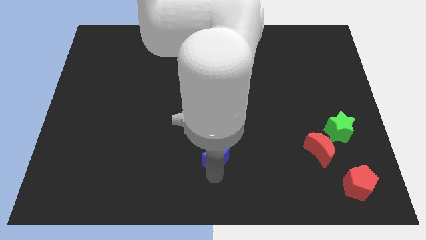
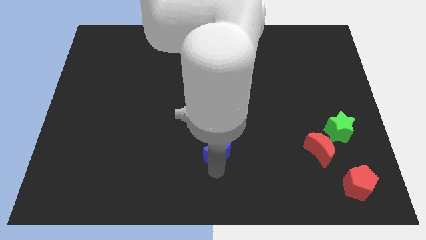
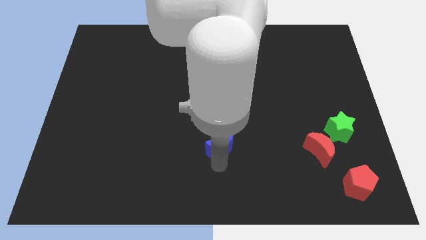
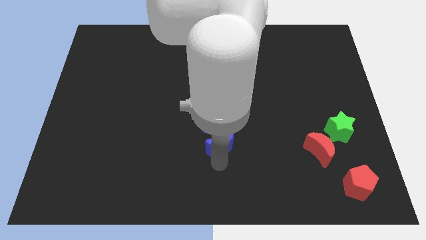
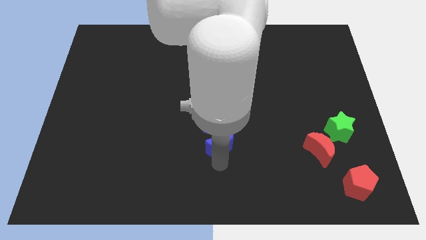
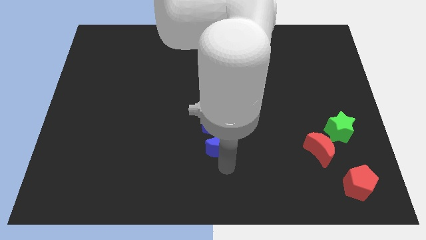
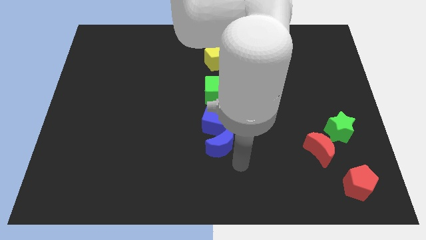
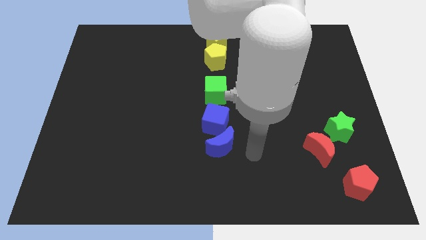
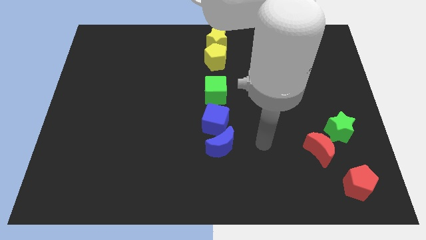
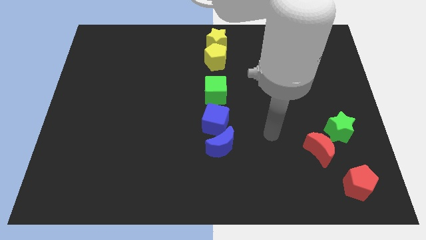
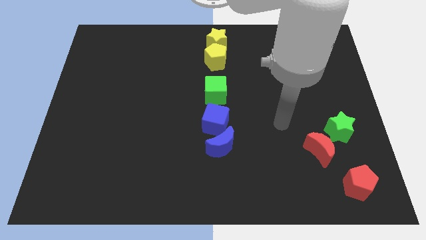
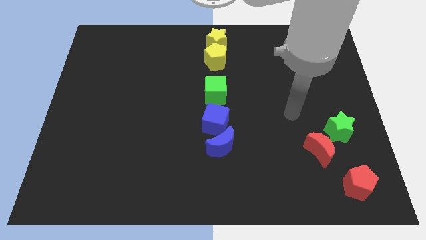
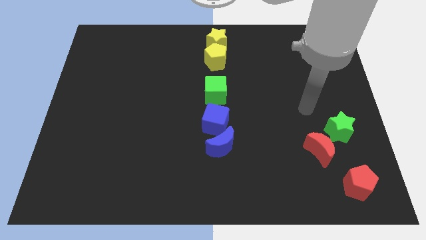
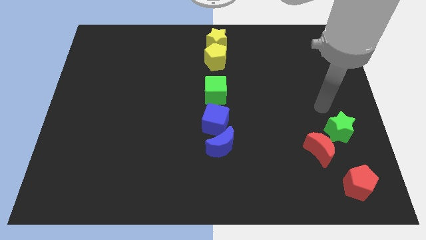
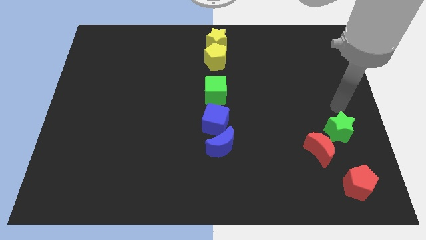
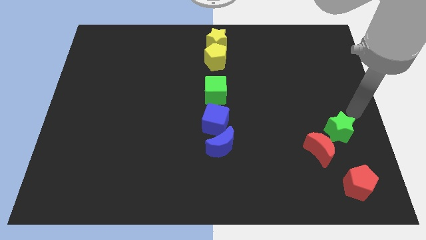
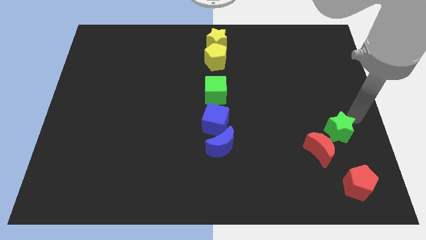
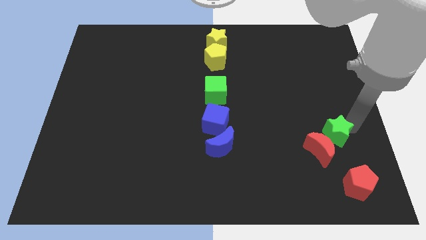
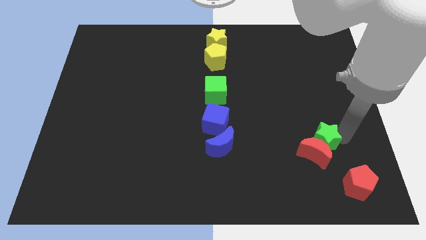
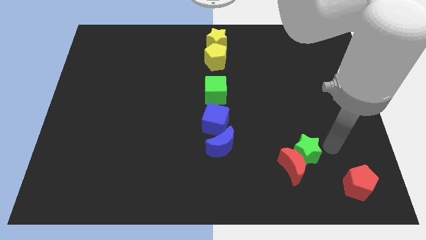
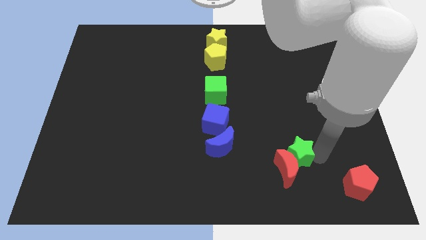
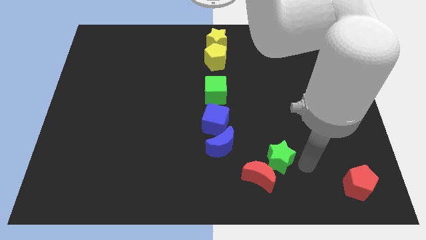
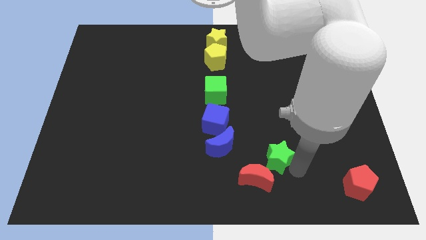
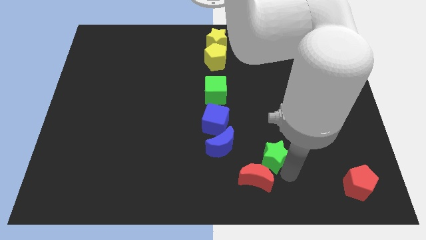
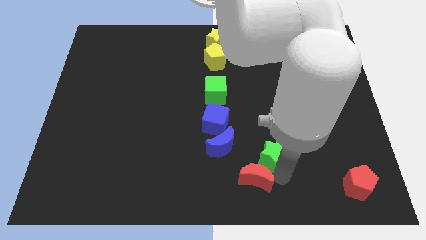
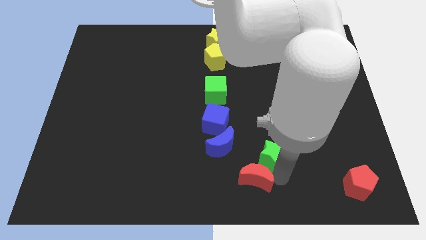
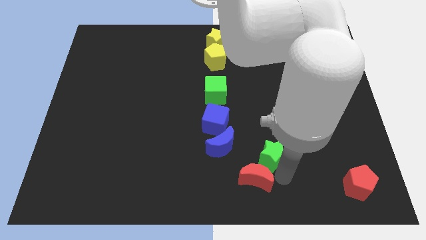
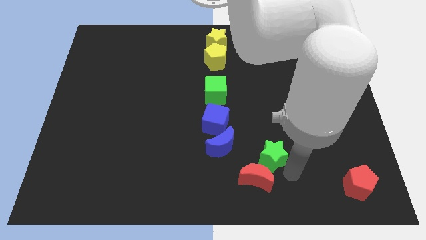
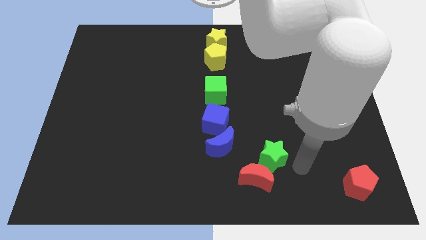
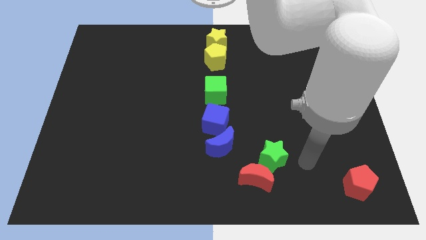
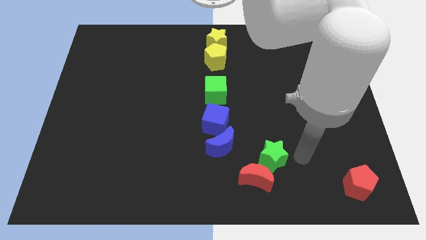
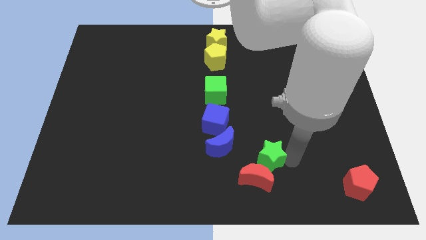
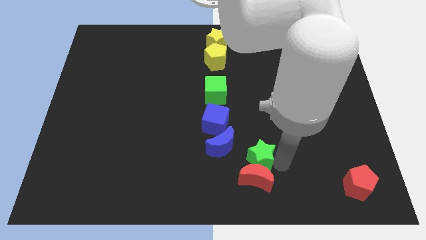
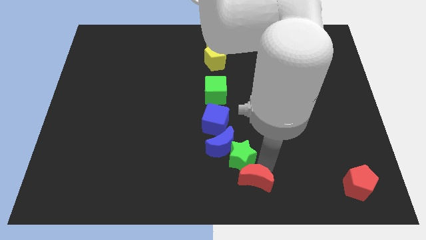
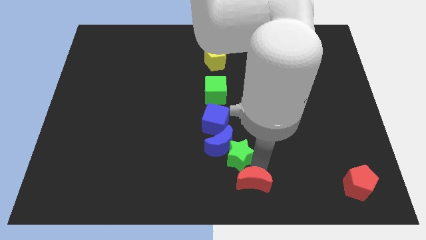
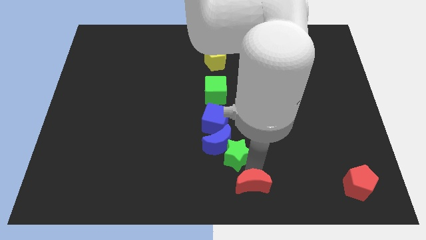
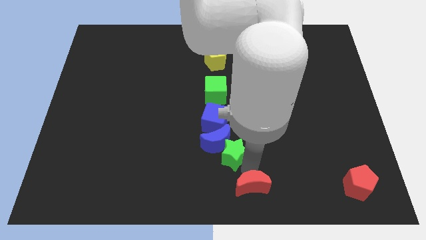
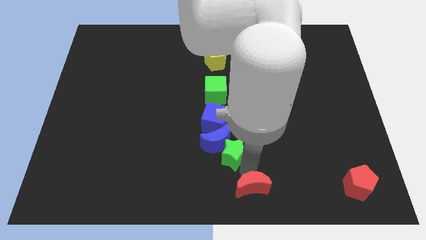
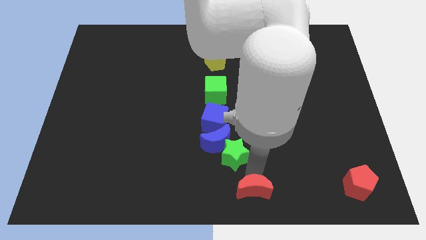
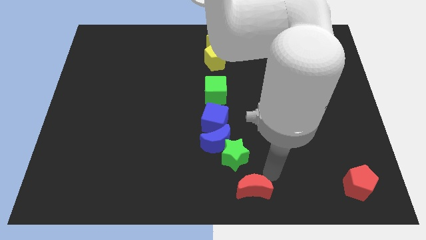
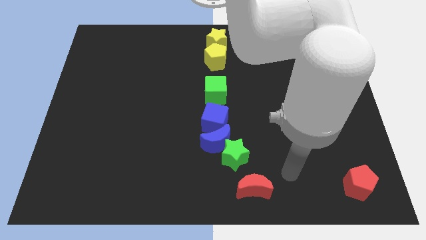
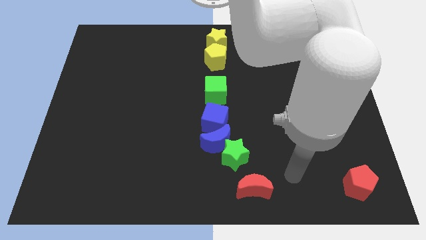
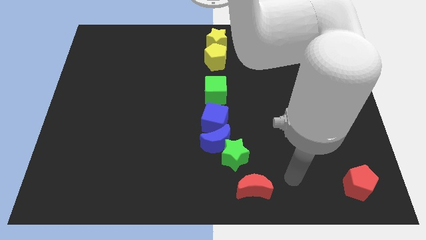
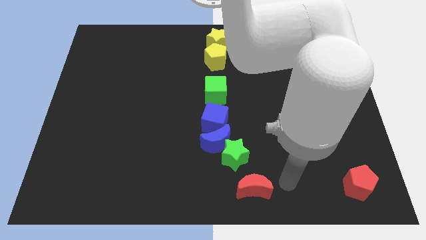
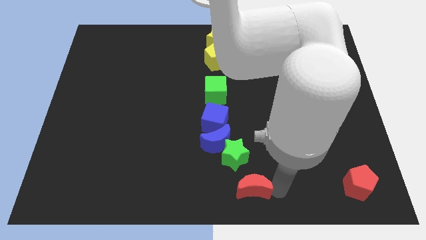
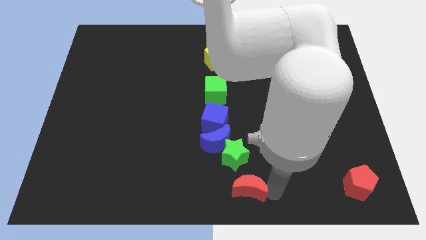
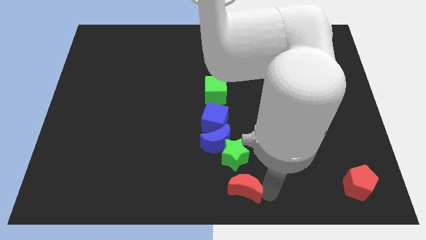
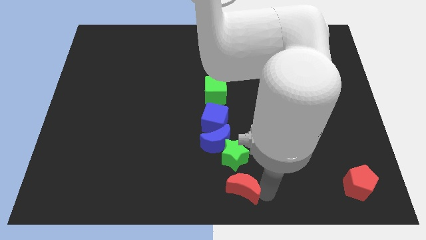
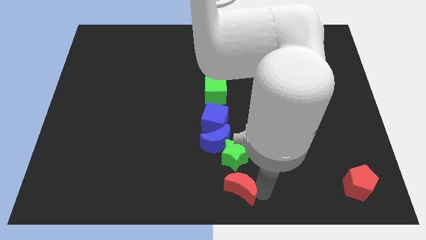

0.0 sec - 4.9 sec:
place blue moongreen star and red crescent below the group of blocks

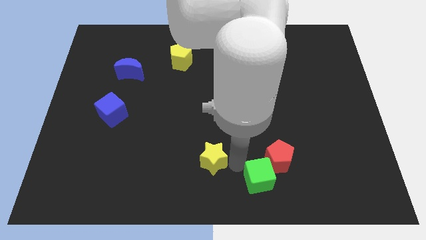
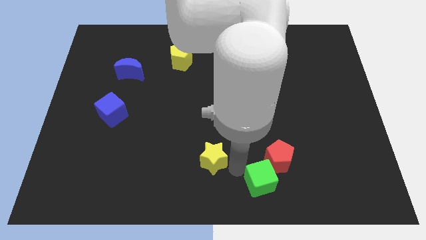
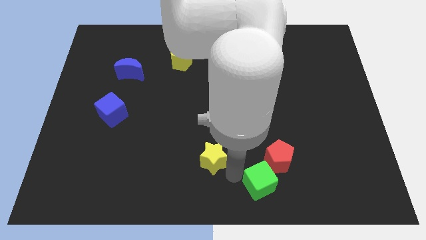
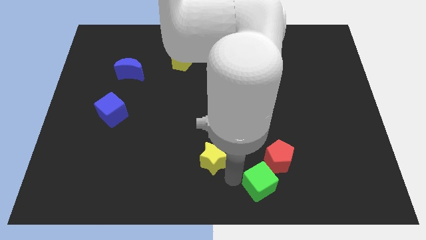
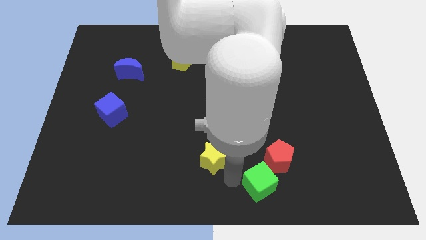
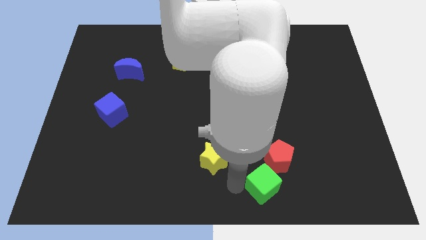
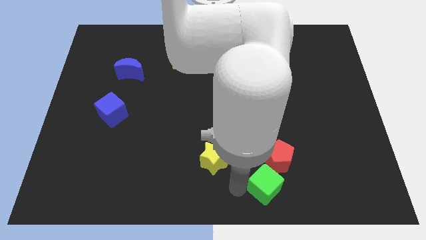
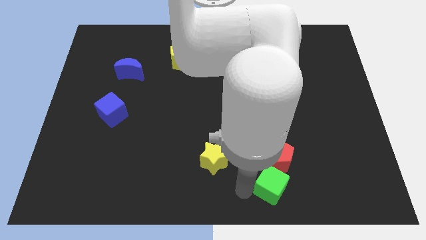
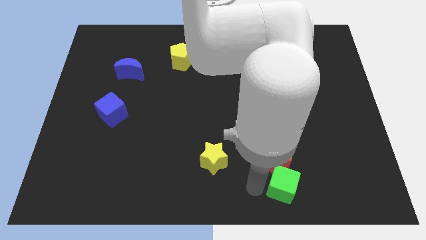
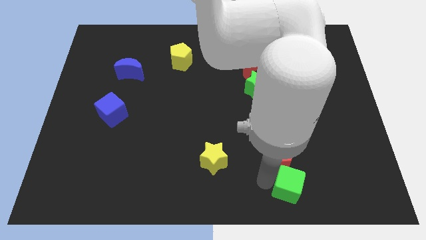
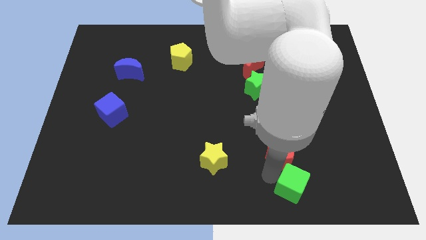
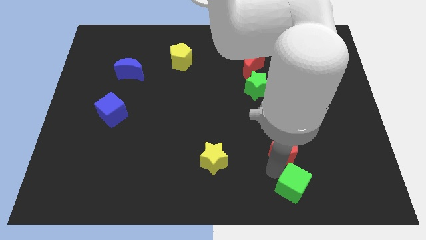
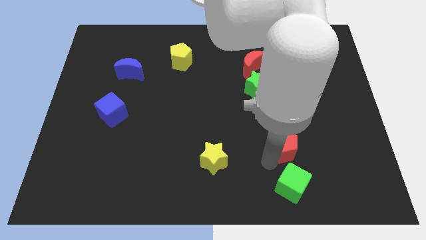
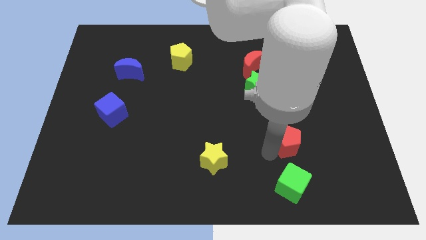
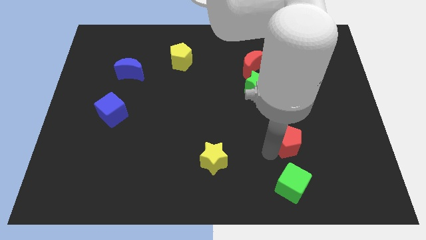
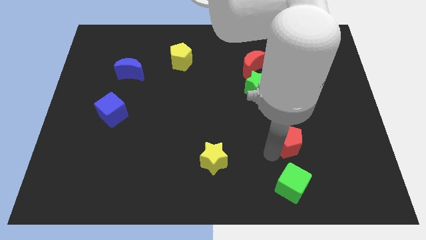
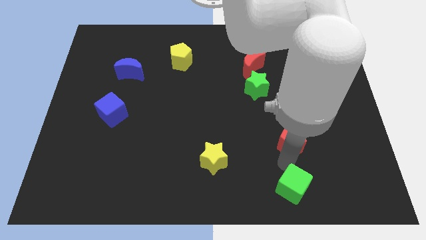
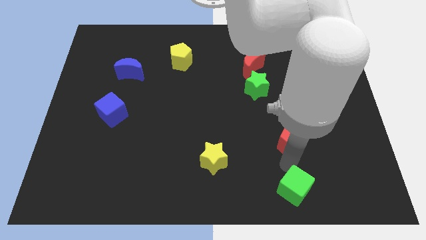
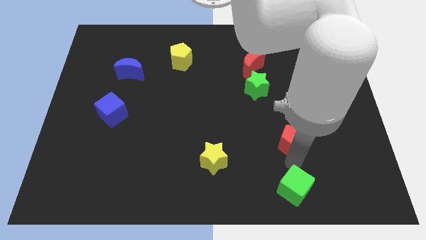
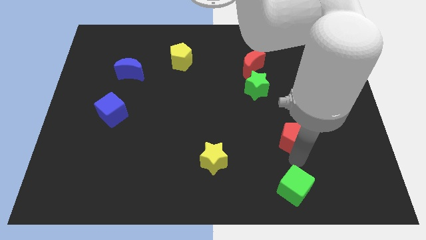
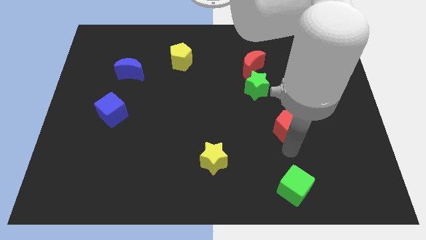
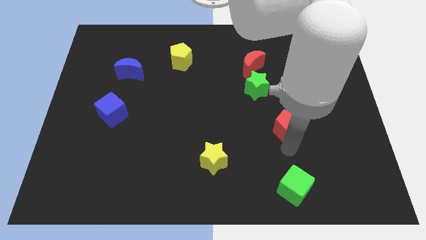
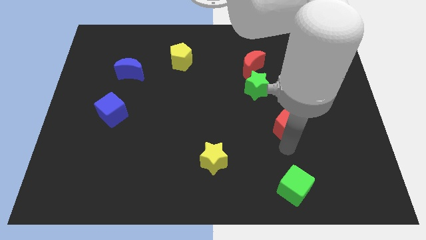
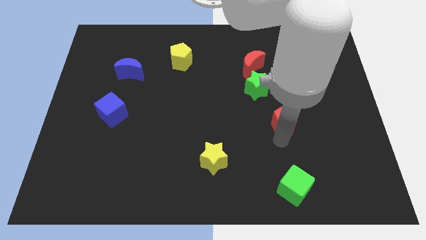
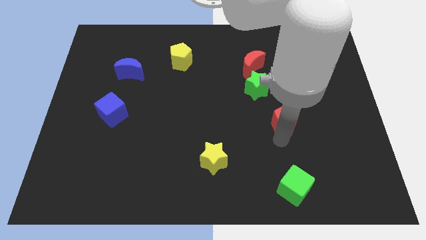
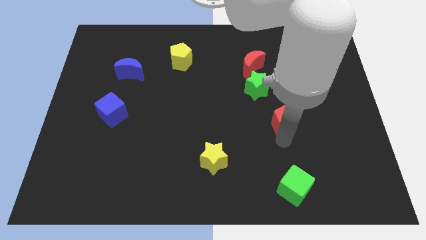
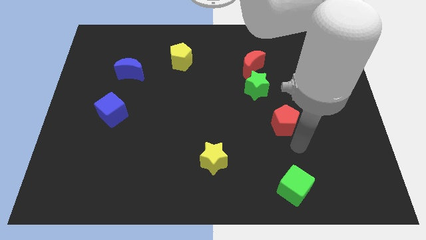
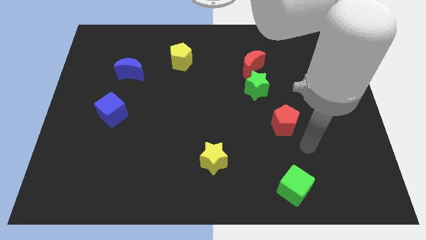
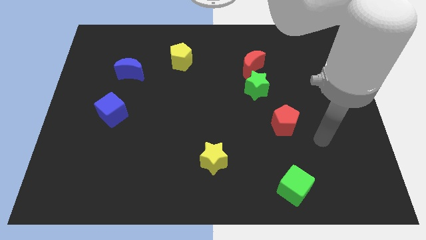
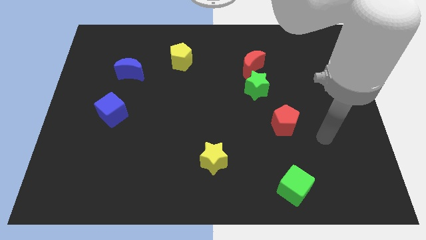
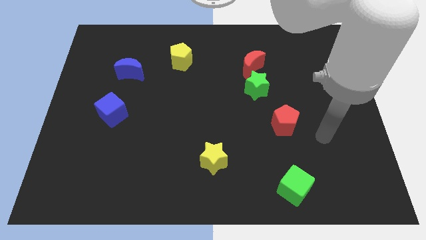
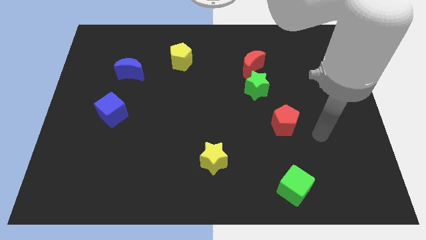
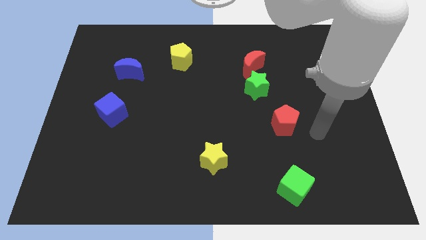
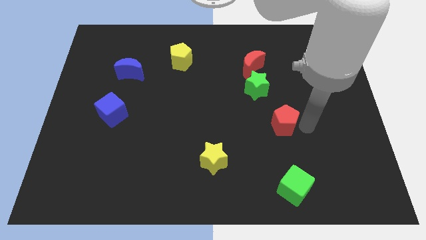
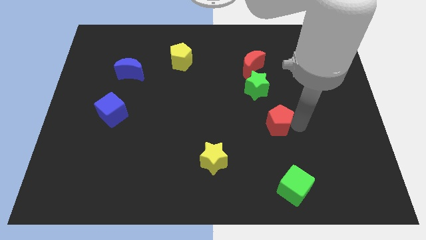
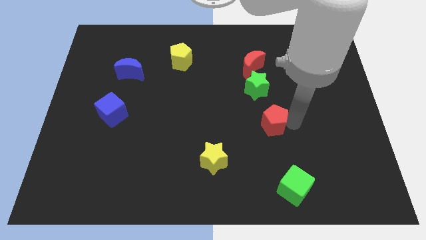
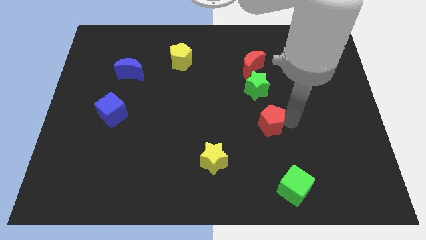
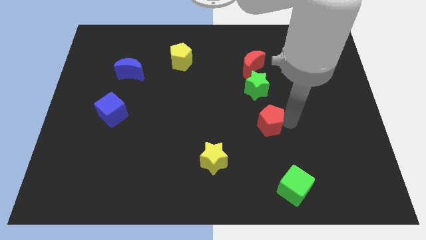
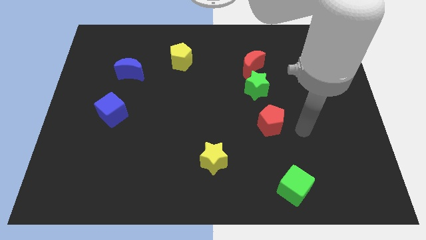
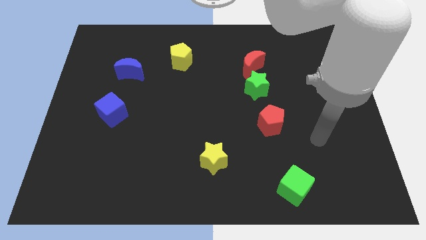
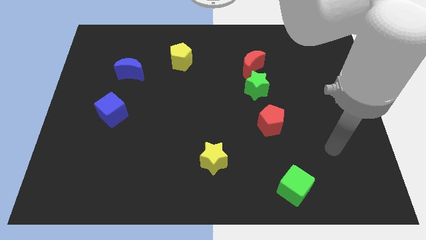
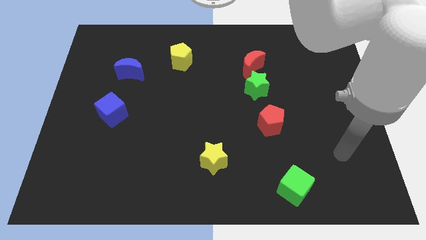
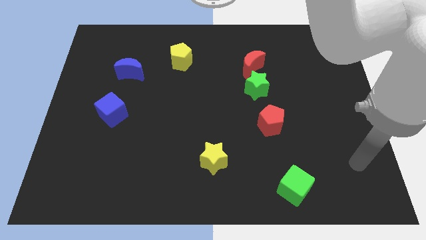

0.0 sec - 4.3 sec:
separate red pentagon from the green cube
